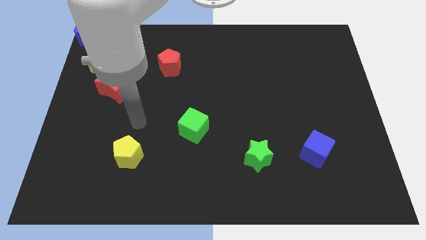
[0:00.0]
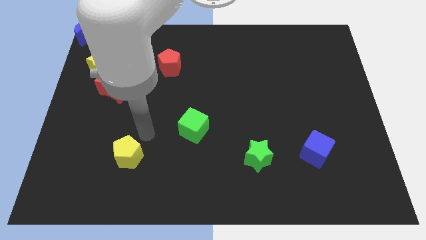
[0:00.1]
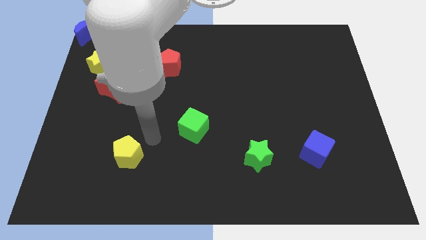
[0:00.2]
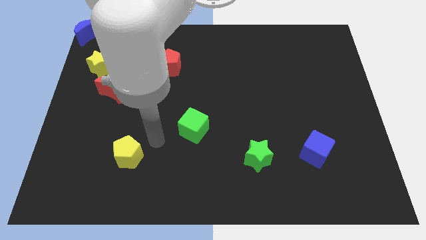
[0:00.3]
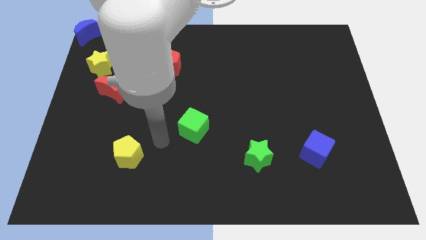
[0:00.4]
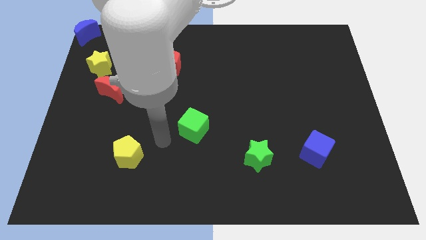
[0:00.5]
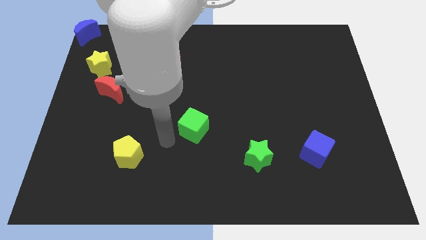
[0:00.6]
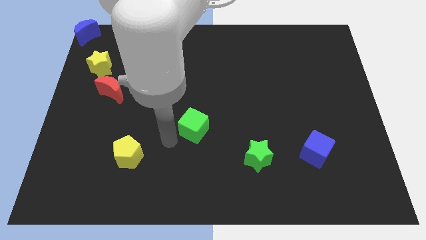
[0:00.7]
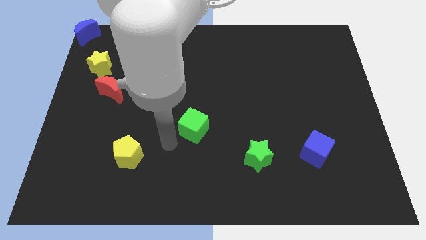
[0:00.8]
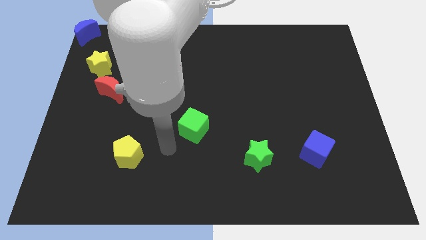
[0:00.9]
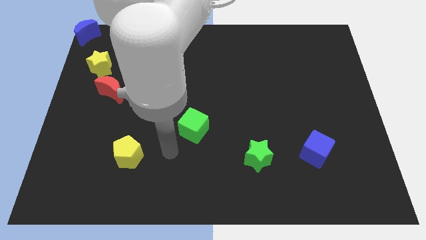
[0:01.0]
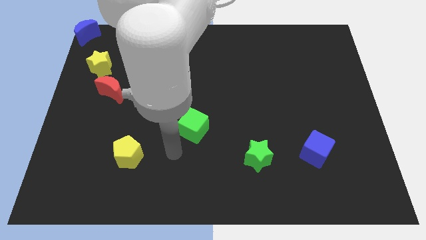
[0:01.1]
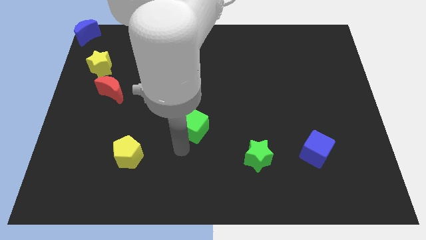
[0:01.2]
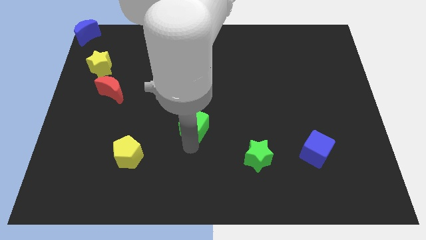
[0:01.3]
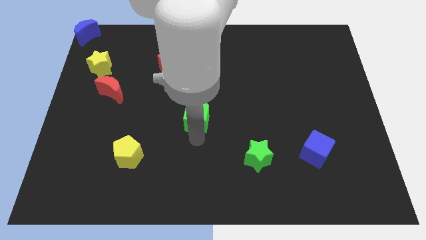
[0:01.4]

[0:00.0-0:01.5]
touch the bottom side of the green cube

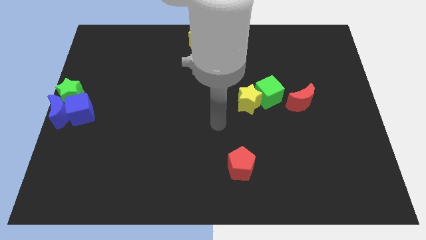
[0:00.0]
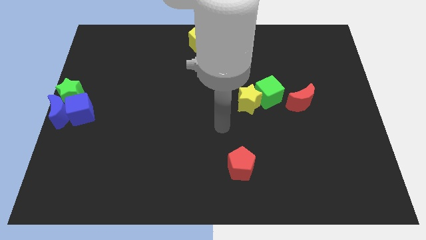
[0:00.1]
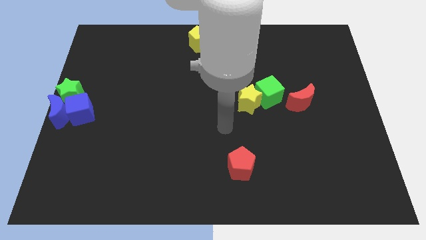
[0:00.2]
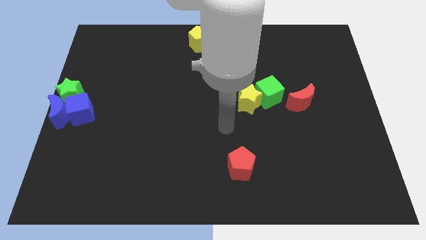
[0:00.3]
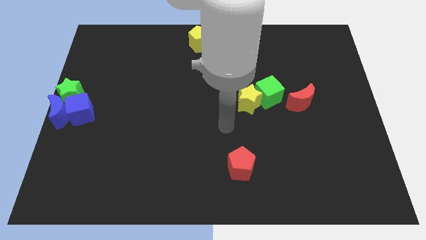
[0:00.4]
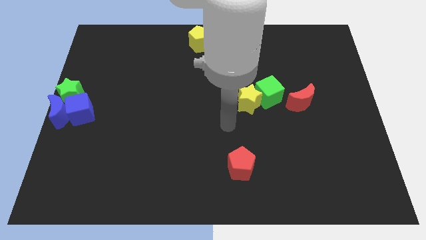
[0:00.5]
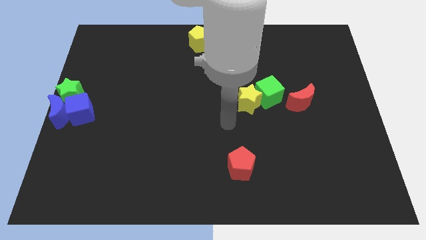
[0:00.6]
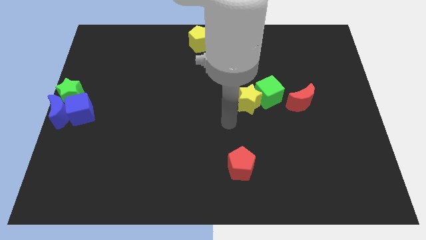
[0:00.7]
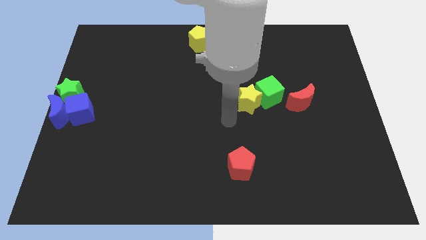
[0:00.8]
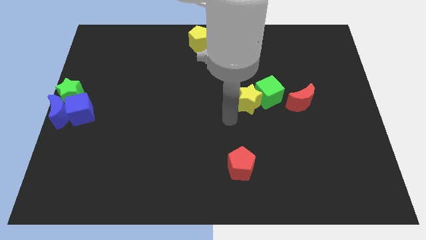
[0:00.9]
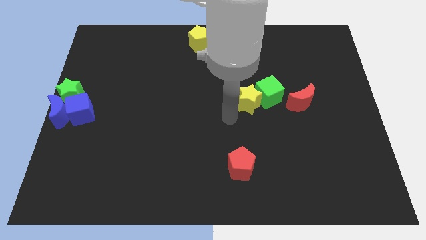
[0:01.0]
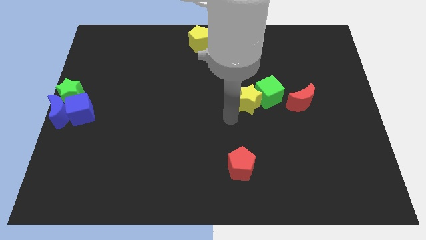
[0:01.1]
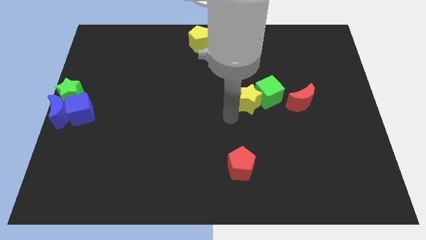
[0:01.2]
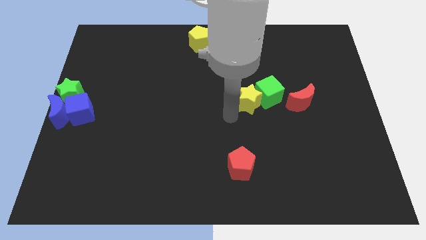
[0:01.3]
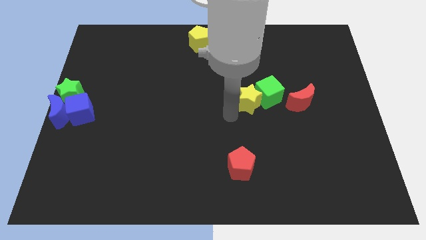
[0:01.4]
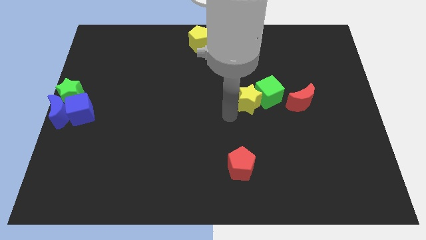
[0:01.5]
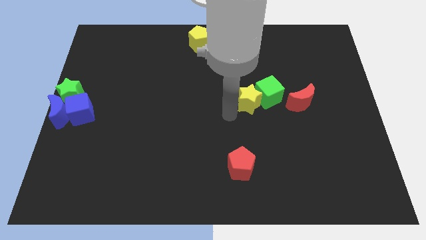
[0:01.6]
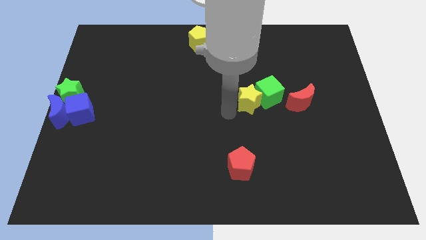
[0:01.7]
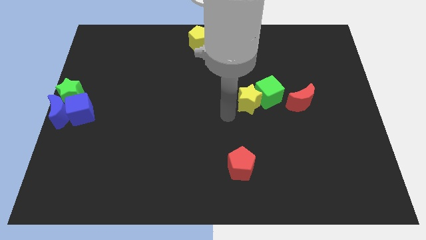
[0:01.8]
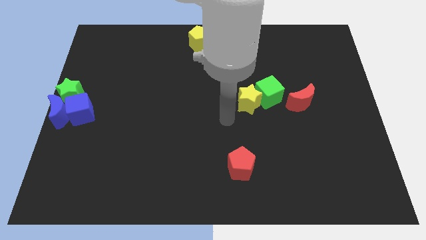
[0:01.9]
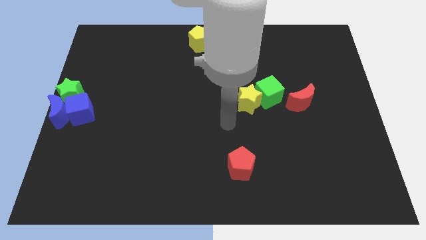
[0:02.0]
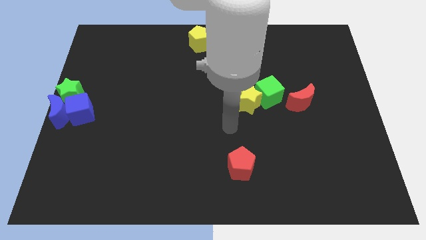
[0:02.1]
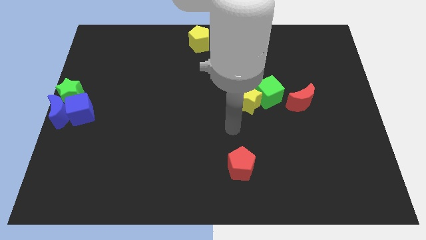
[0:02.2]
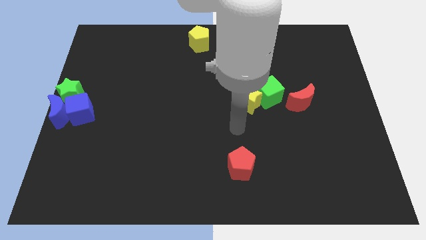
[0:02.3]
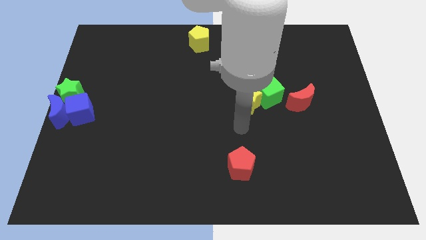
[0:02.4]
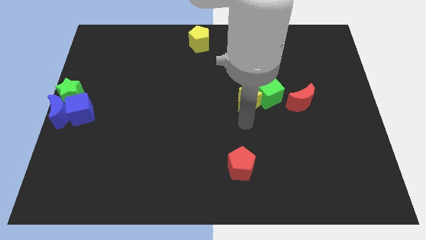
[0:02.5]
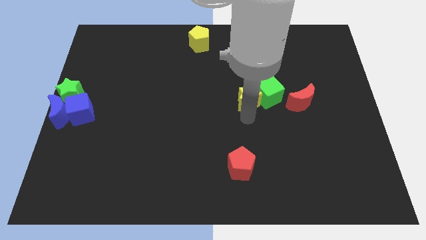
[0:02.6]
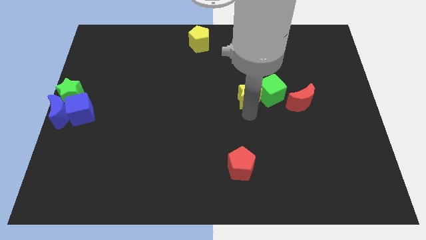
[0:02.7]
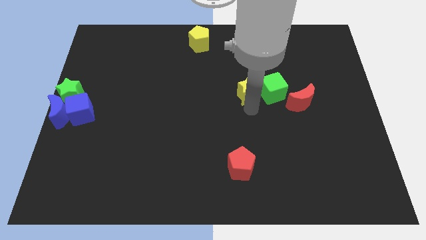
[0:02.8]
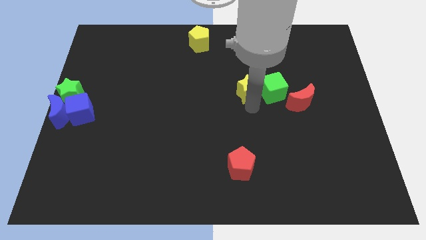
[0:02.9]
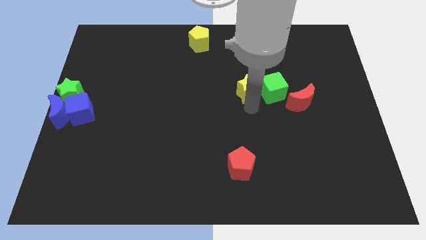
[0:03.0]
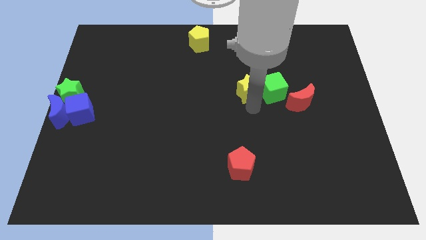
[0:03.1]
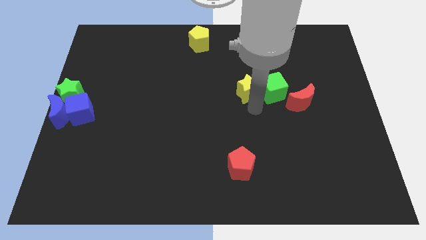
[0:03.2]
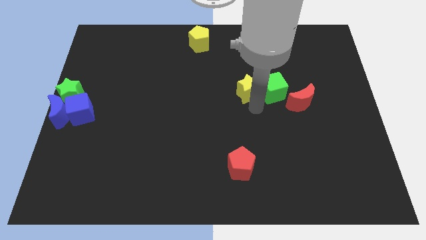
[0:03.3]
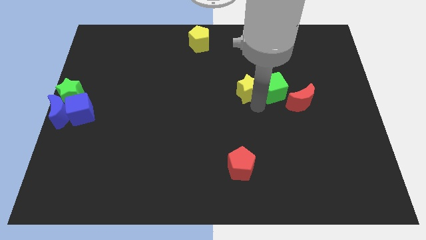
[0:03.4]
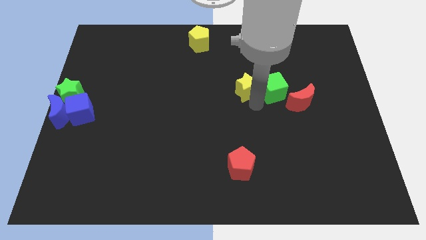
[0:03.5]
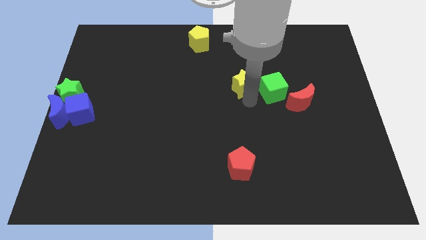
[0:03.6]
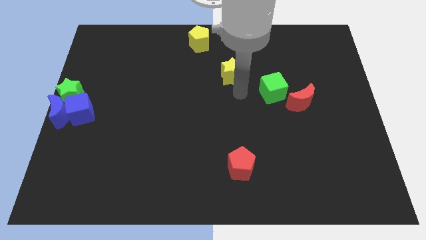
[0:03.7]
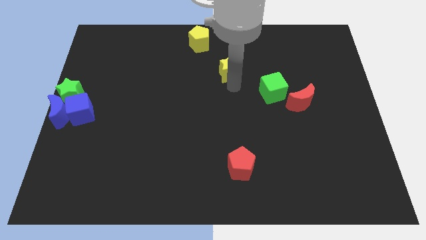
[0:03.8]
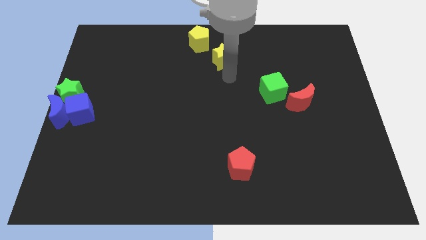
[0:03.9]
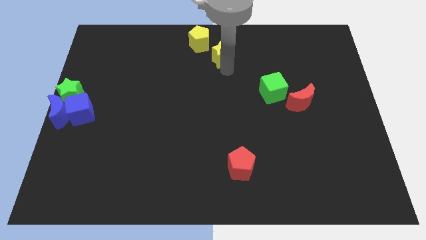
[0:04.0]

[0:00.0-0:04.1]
separate yellow star from green cube

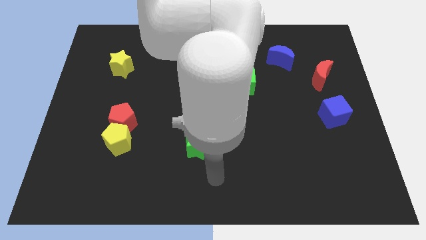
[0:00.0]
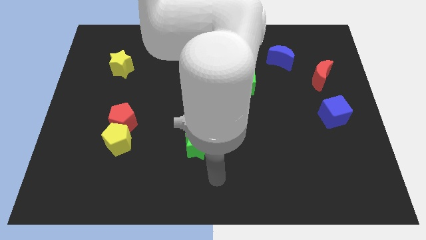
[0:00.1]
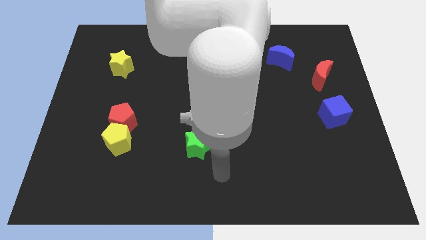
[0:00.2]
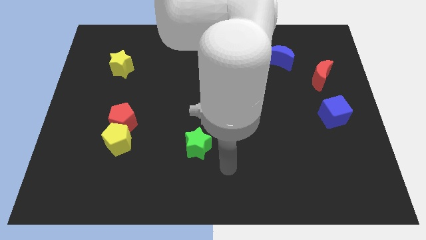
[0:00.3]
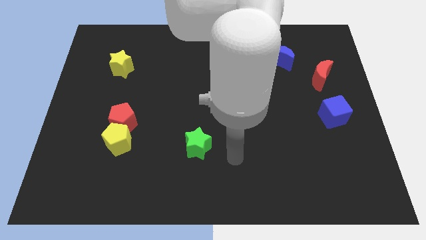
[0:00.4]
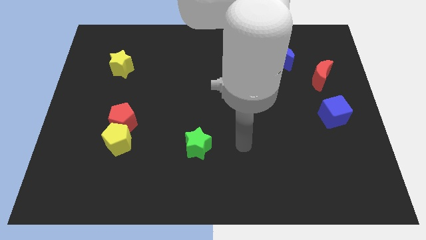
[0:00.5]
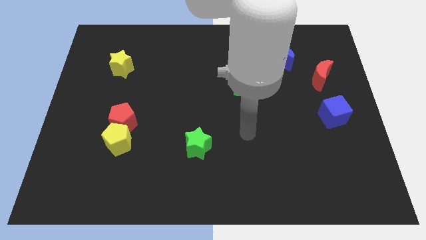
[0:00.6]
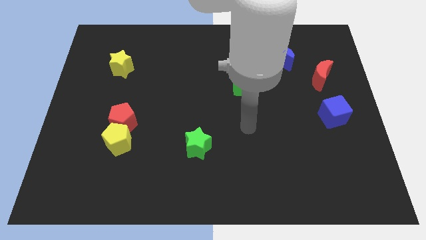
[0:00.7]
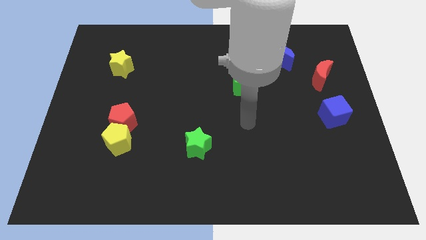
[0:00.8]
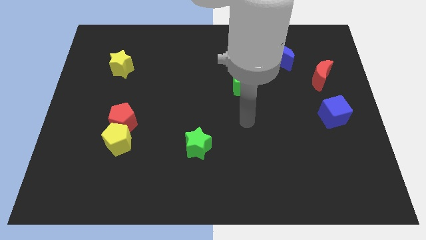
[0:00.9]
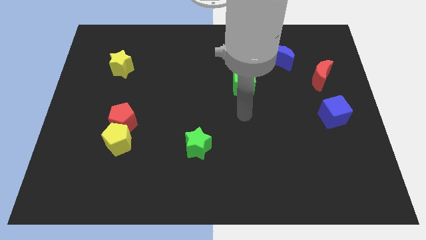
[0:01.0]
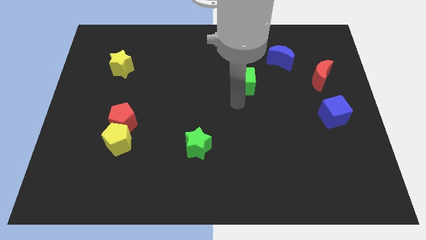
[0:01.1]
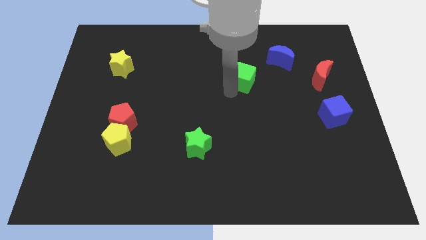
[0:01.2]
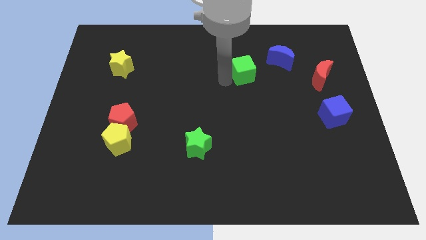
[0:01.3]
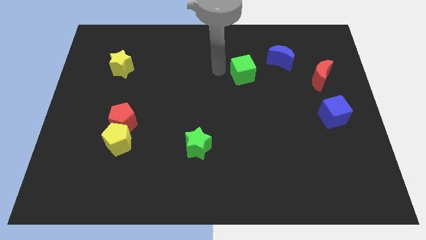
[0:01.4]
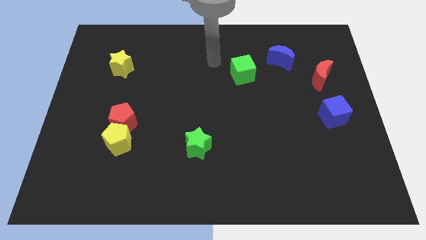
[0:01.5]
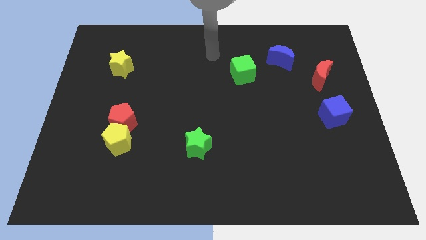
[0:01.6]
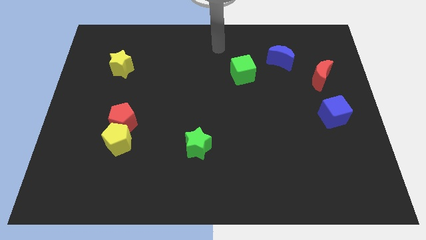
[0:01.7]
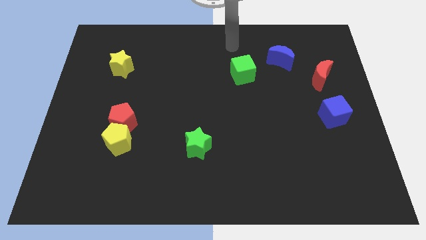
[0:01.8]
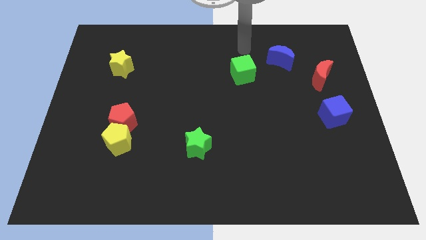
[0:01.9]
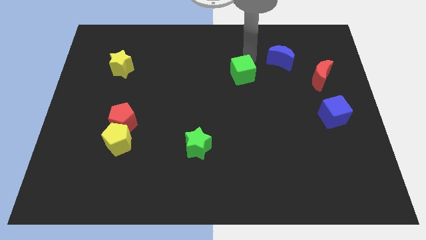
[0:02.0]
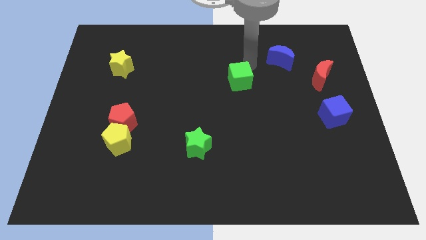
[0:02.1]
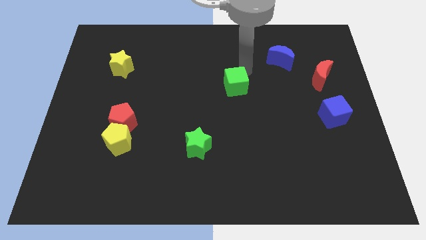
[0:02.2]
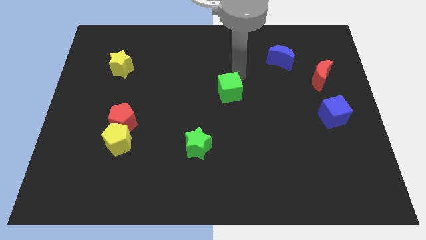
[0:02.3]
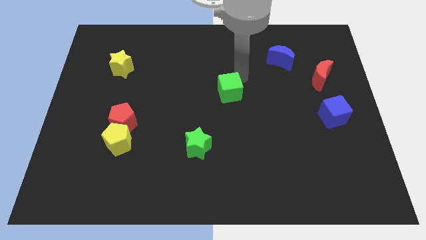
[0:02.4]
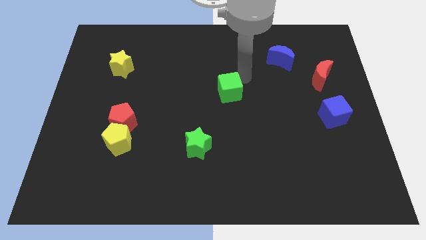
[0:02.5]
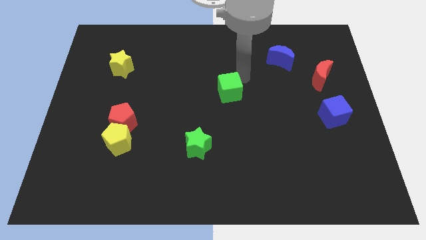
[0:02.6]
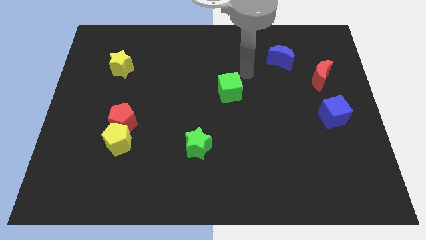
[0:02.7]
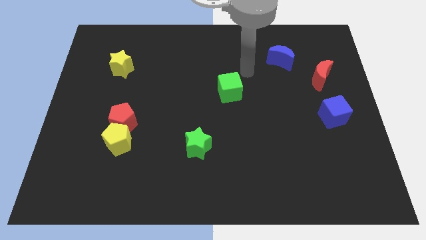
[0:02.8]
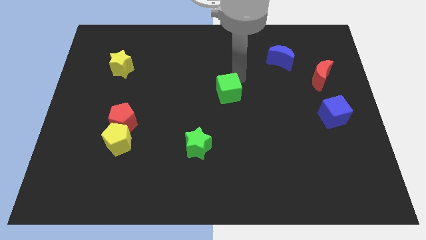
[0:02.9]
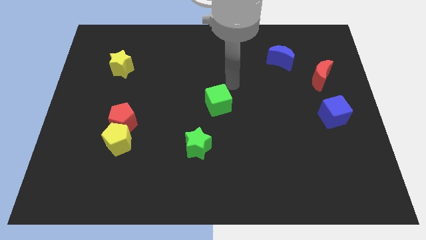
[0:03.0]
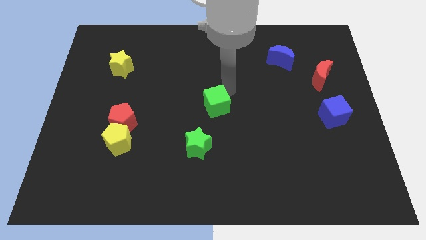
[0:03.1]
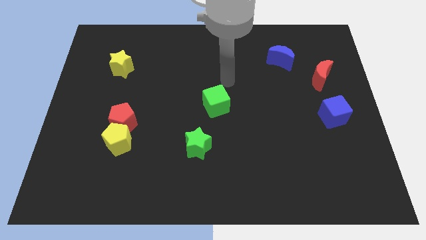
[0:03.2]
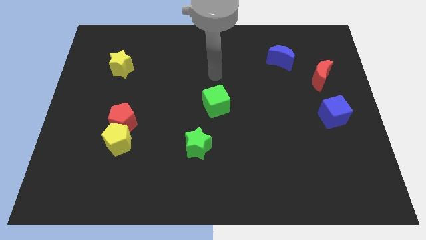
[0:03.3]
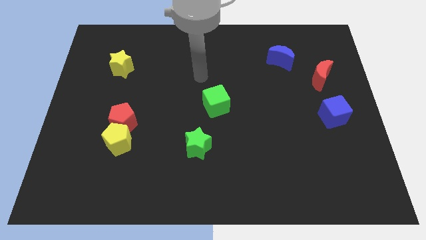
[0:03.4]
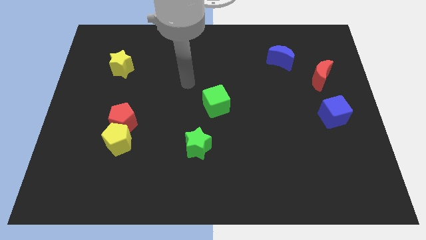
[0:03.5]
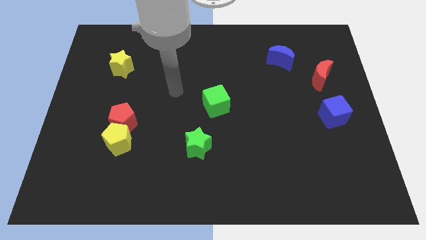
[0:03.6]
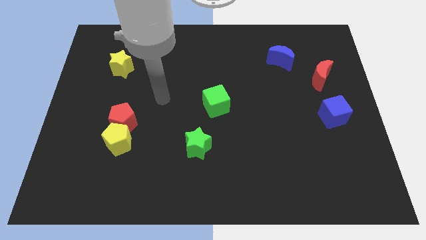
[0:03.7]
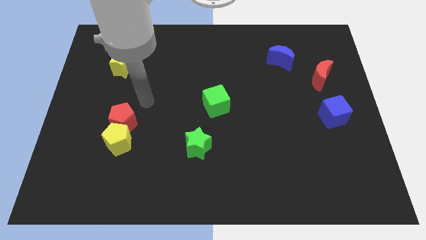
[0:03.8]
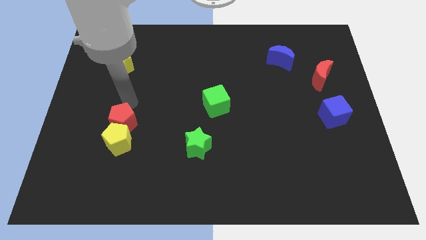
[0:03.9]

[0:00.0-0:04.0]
push the green cube to the center of the board
